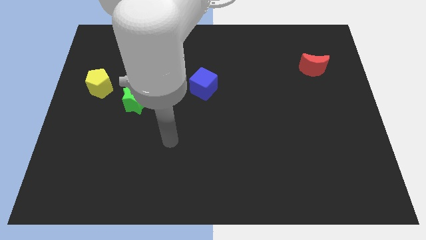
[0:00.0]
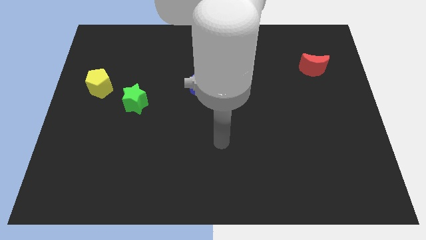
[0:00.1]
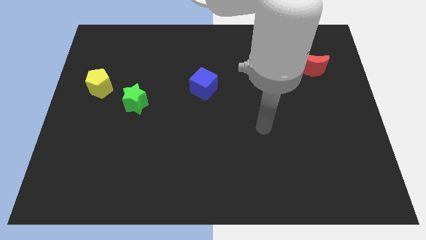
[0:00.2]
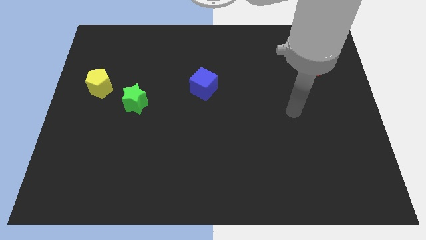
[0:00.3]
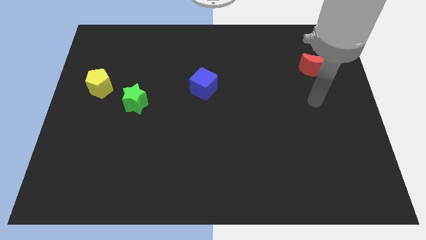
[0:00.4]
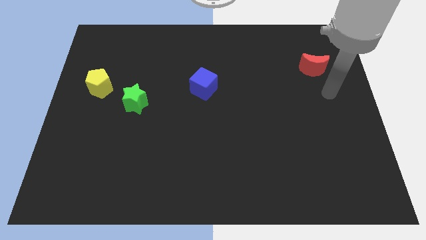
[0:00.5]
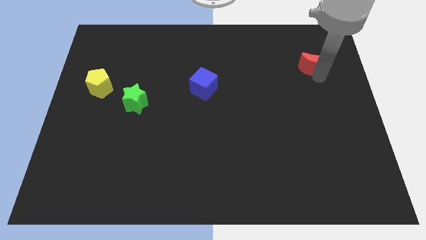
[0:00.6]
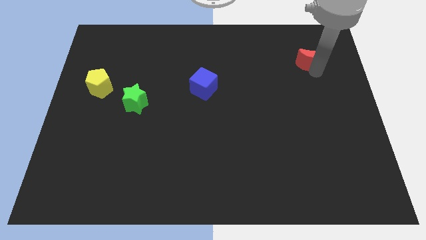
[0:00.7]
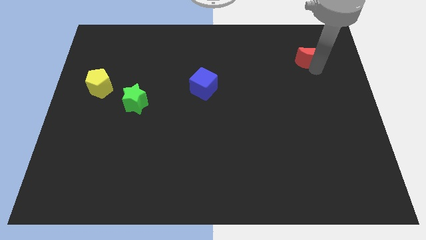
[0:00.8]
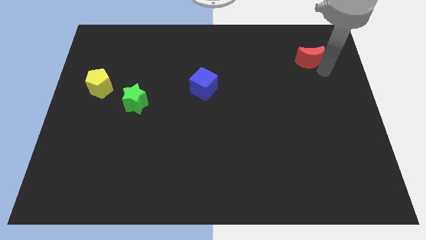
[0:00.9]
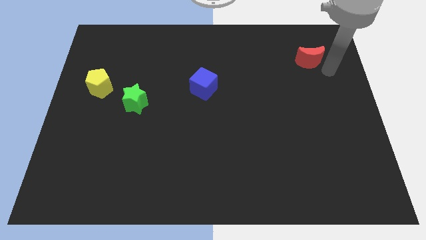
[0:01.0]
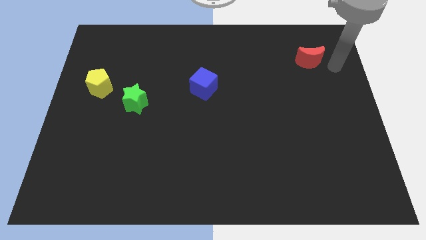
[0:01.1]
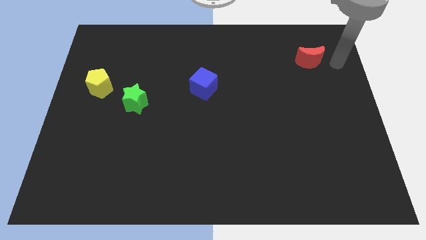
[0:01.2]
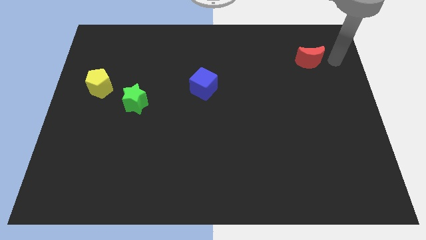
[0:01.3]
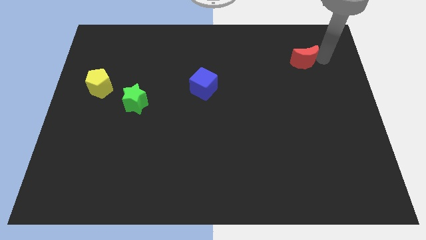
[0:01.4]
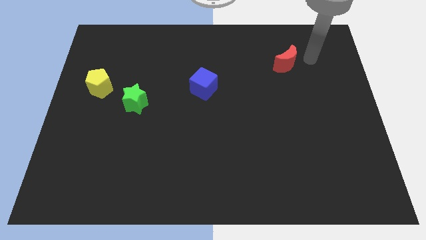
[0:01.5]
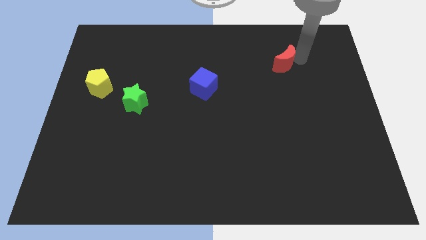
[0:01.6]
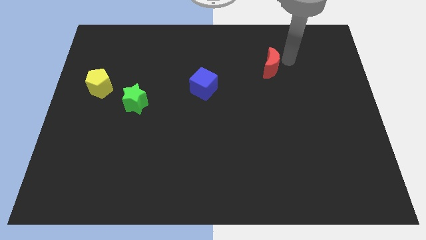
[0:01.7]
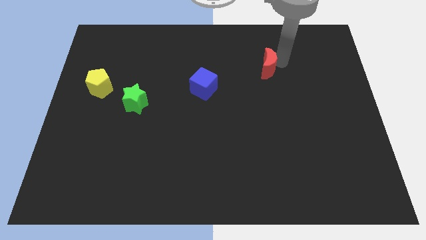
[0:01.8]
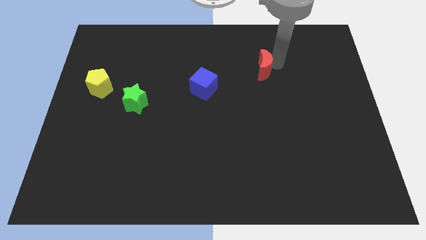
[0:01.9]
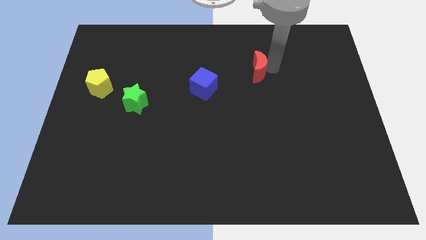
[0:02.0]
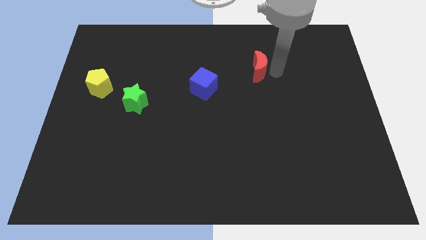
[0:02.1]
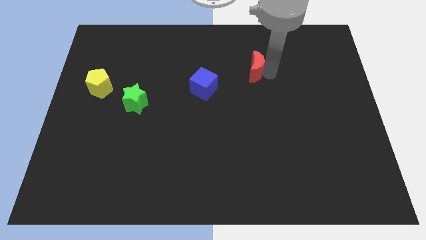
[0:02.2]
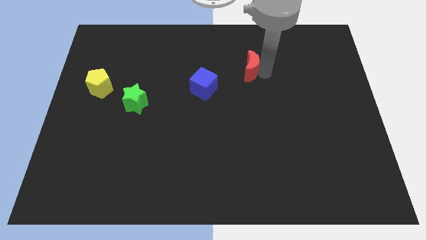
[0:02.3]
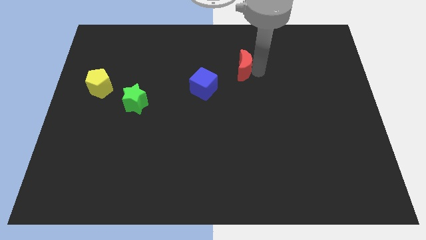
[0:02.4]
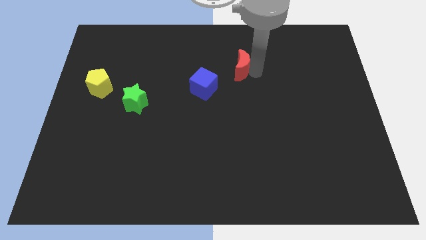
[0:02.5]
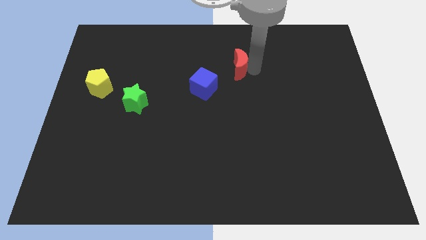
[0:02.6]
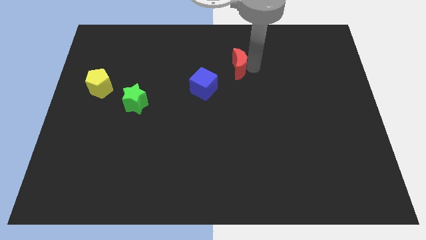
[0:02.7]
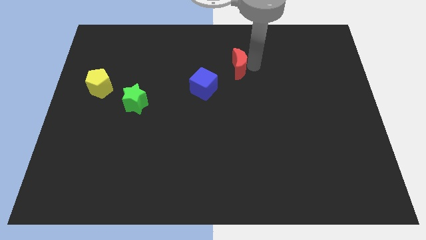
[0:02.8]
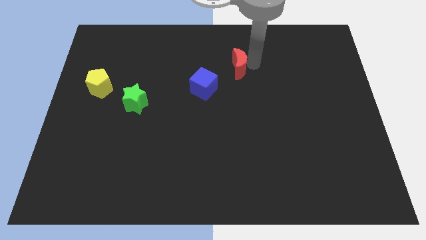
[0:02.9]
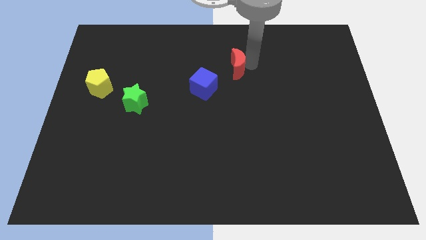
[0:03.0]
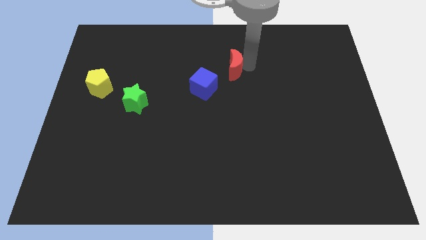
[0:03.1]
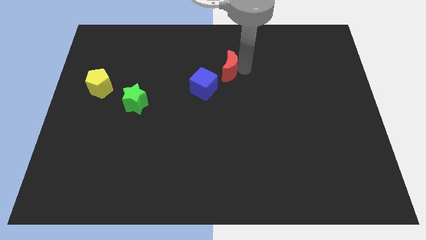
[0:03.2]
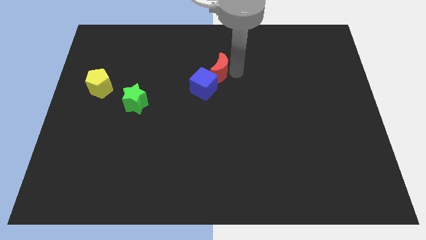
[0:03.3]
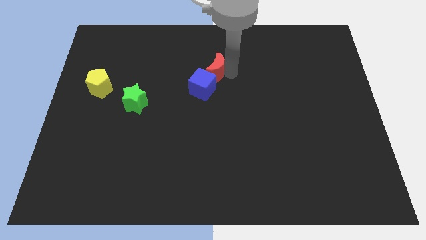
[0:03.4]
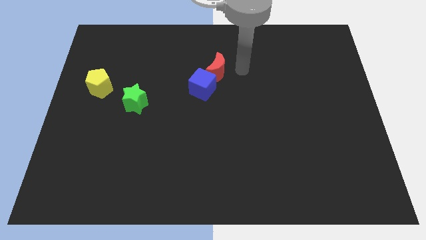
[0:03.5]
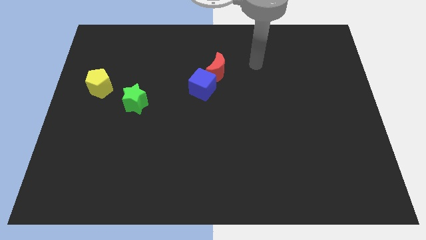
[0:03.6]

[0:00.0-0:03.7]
push the moon towards the blue block

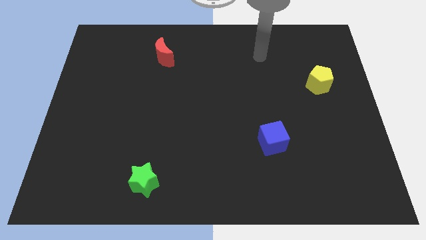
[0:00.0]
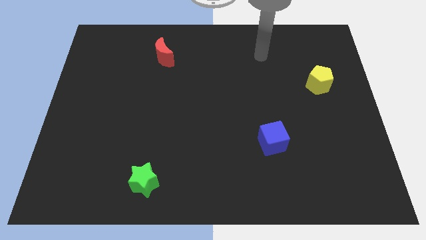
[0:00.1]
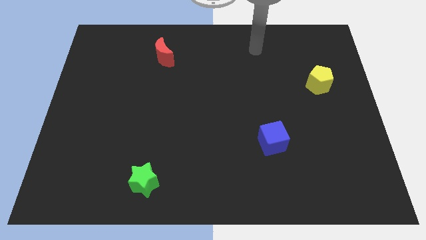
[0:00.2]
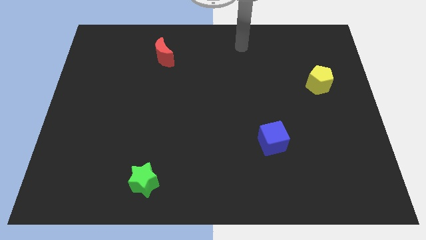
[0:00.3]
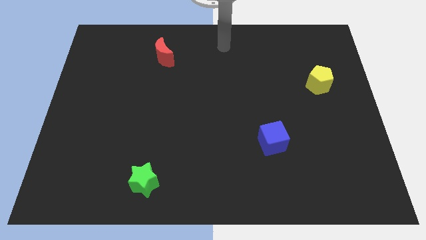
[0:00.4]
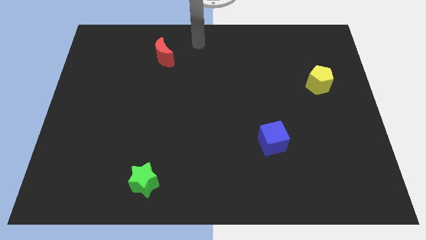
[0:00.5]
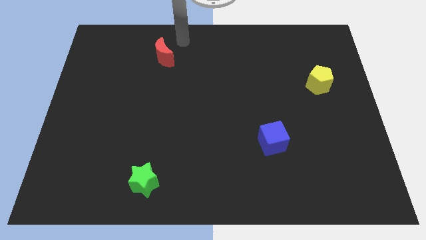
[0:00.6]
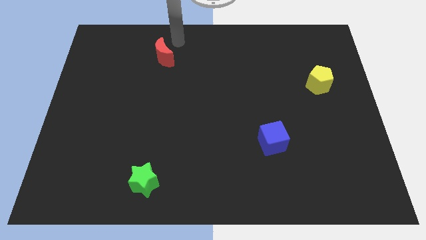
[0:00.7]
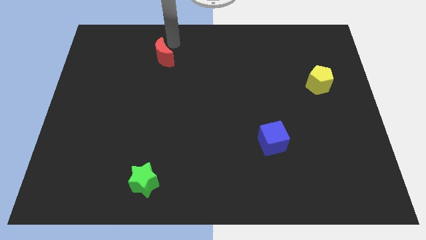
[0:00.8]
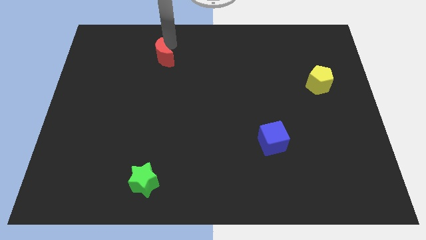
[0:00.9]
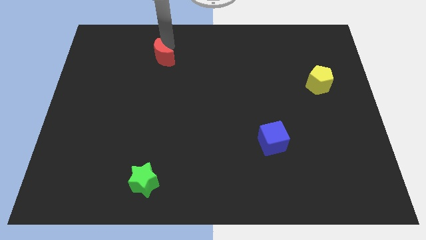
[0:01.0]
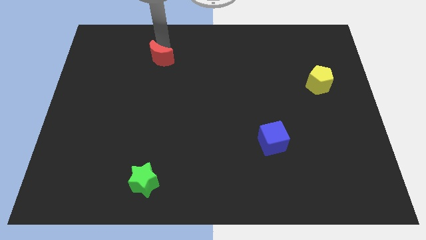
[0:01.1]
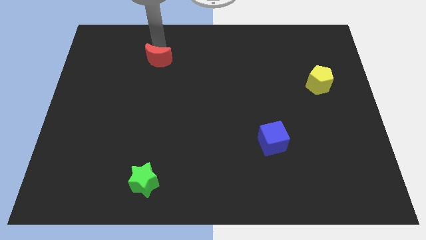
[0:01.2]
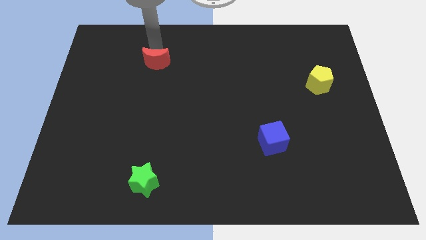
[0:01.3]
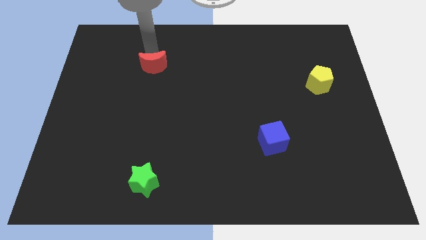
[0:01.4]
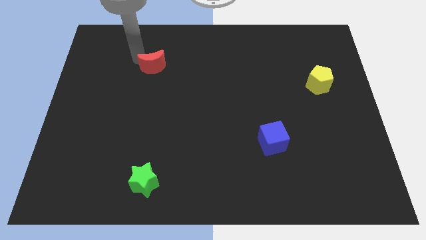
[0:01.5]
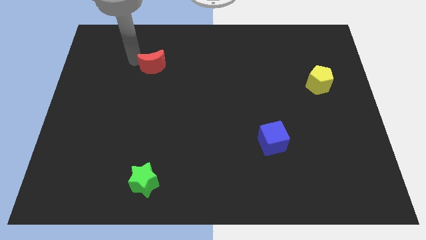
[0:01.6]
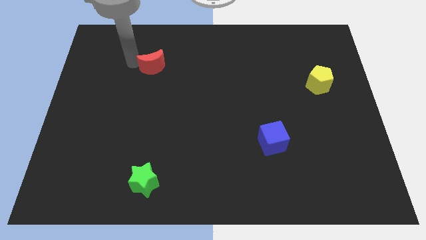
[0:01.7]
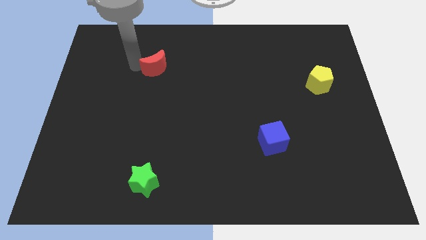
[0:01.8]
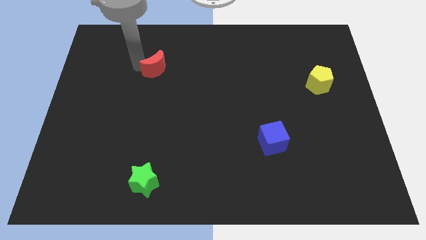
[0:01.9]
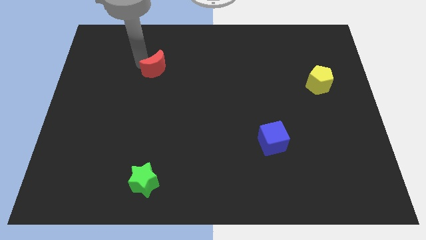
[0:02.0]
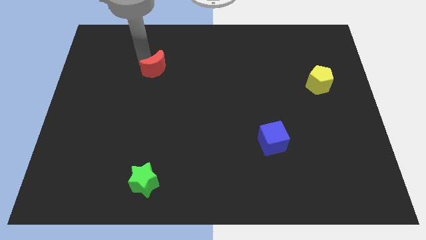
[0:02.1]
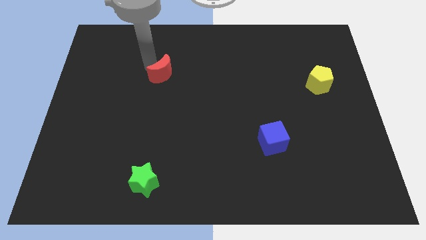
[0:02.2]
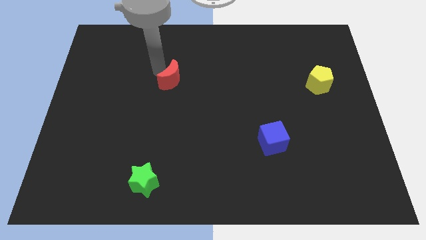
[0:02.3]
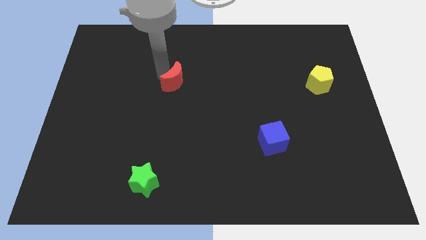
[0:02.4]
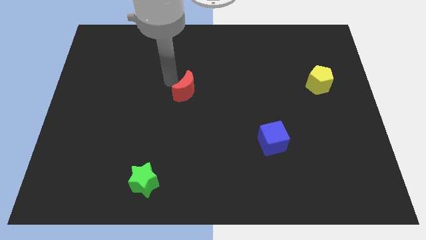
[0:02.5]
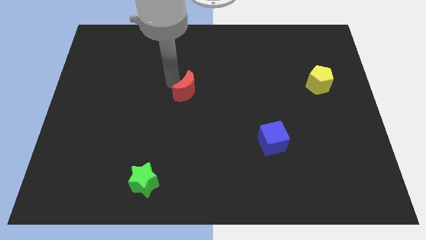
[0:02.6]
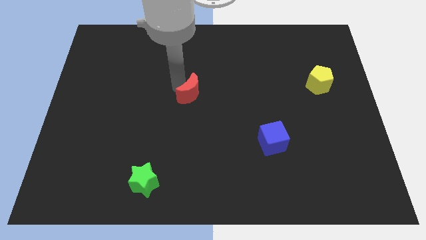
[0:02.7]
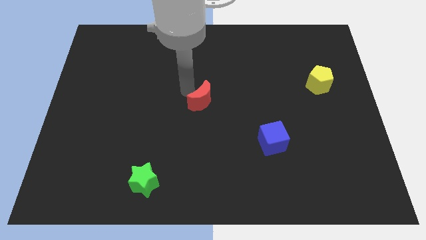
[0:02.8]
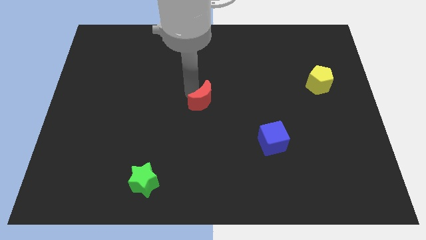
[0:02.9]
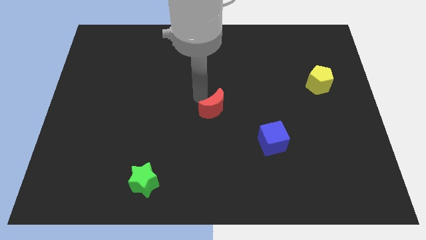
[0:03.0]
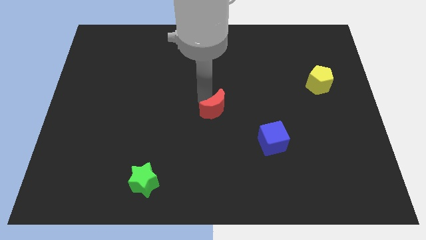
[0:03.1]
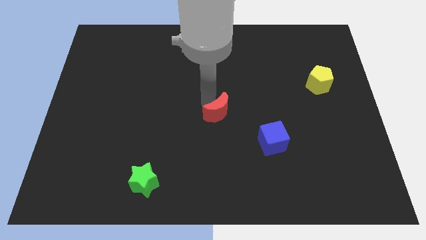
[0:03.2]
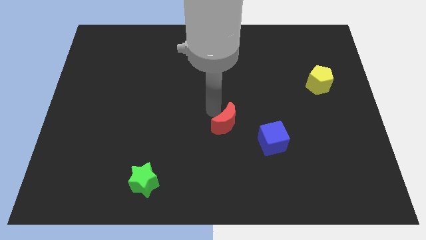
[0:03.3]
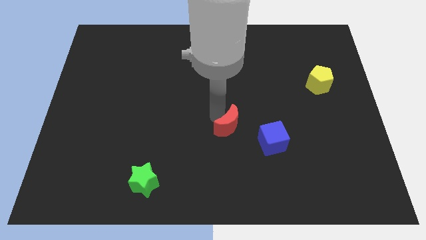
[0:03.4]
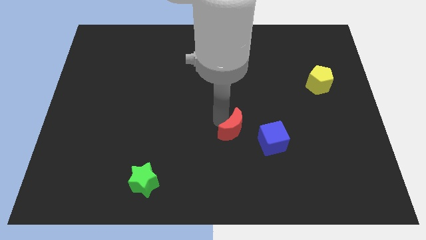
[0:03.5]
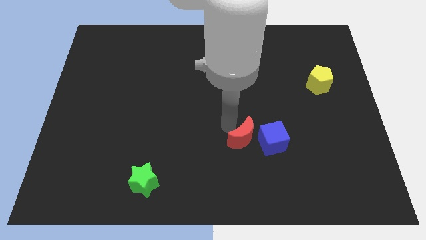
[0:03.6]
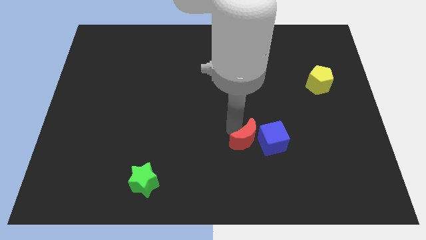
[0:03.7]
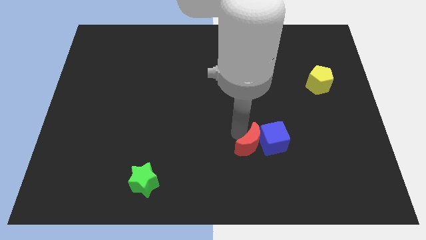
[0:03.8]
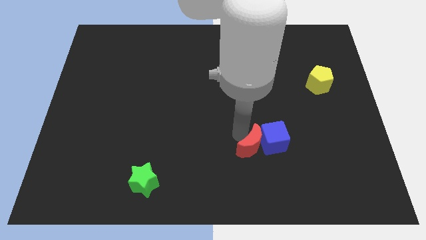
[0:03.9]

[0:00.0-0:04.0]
slide the moon next to the blue cube

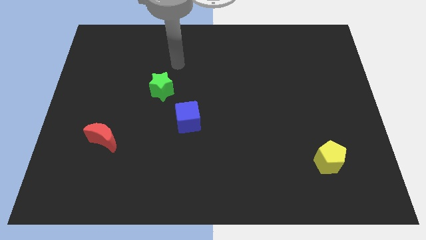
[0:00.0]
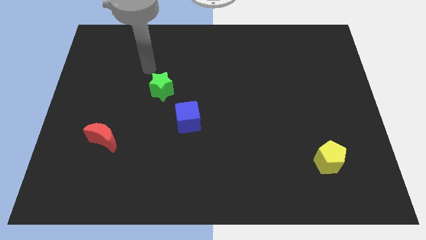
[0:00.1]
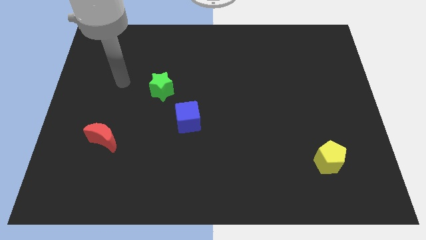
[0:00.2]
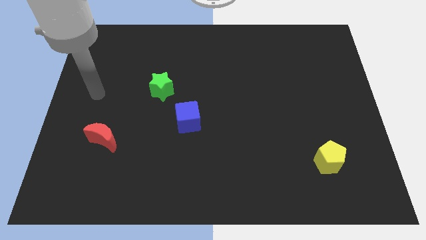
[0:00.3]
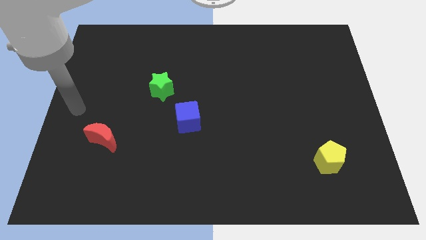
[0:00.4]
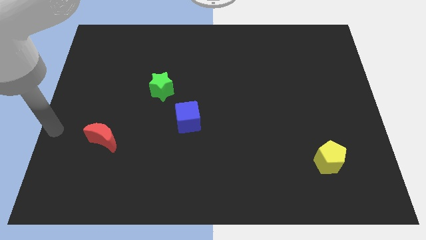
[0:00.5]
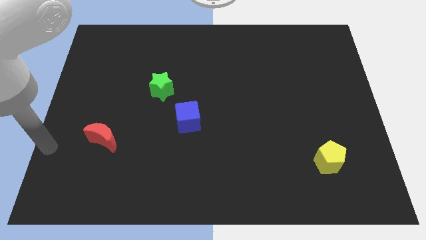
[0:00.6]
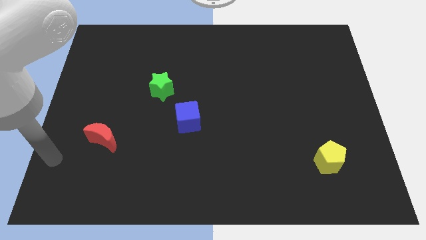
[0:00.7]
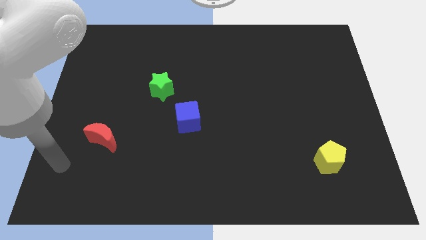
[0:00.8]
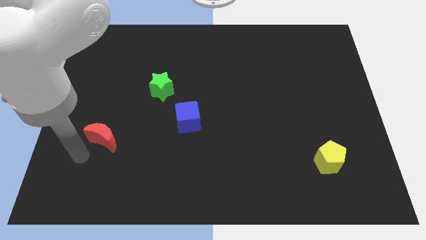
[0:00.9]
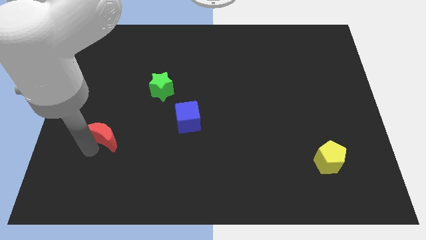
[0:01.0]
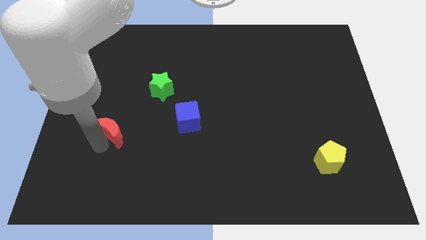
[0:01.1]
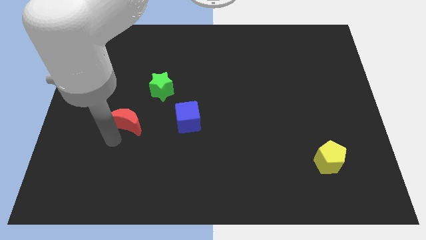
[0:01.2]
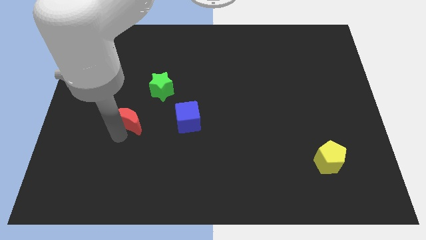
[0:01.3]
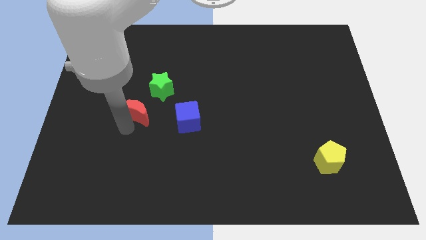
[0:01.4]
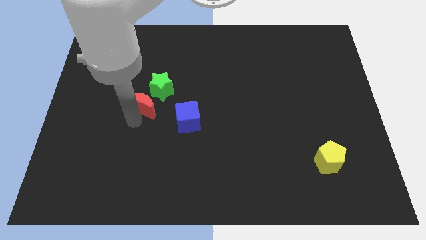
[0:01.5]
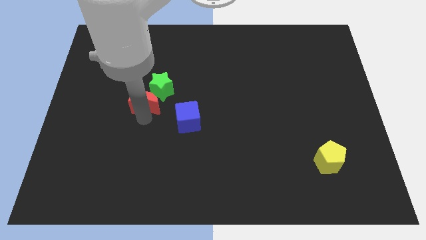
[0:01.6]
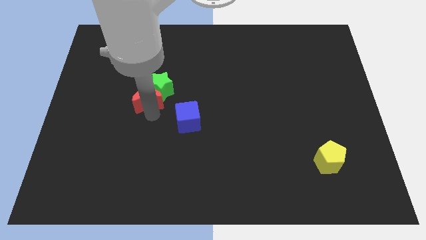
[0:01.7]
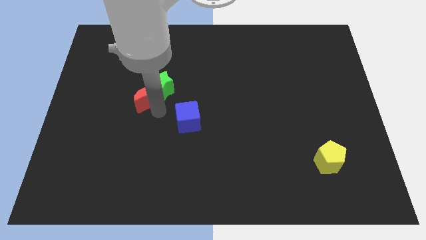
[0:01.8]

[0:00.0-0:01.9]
slide the moon close to the green star
